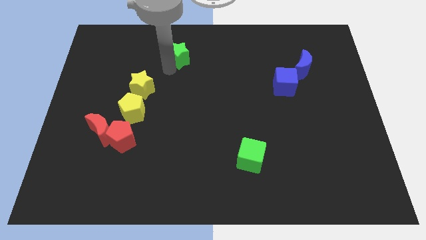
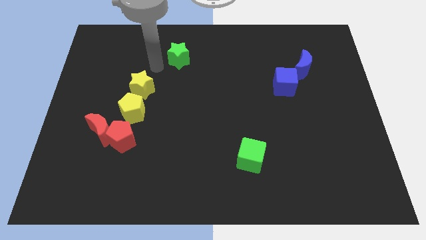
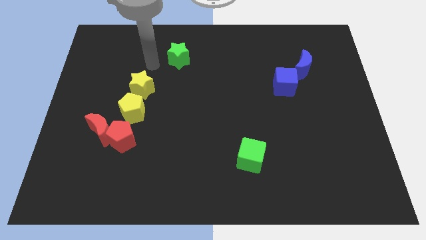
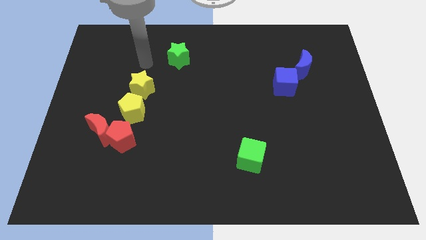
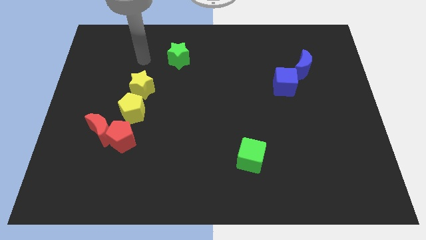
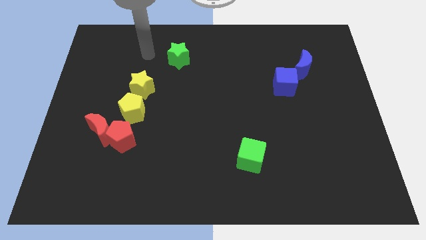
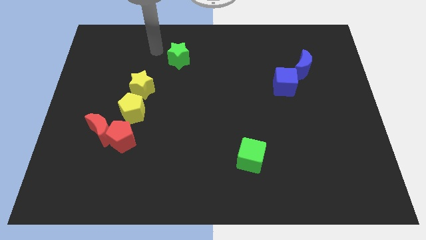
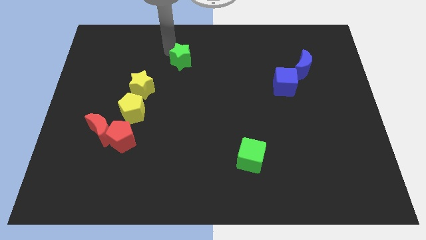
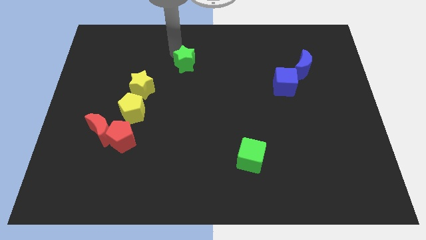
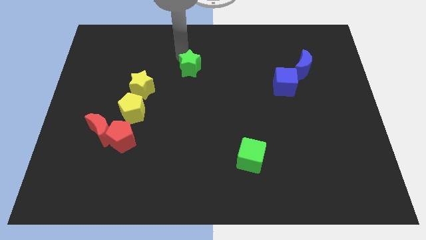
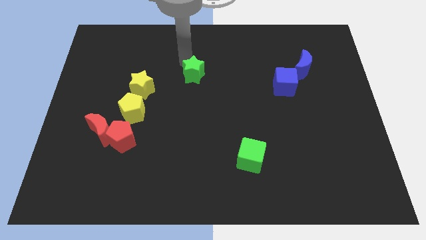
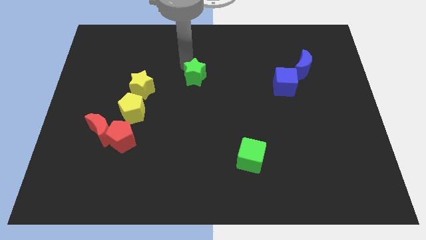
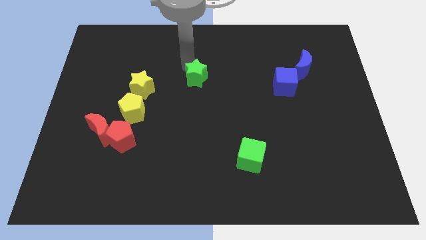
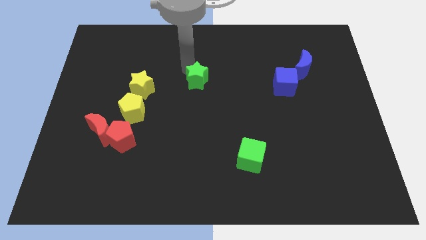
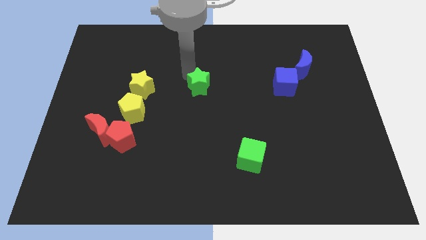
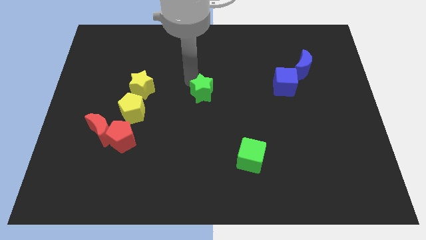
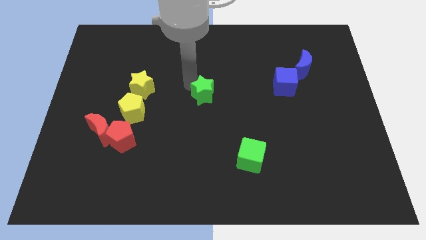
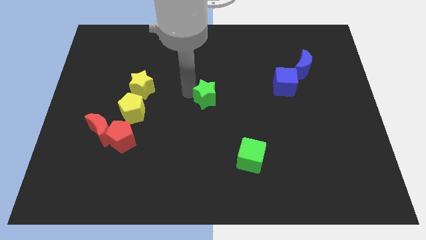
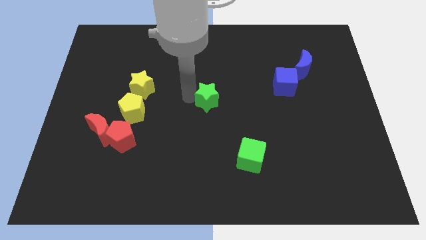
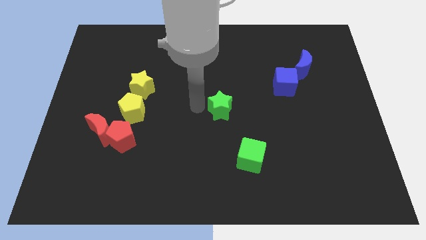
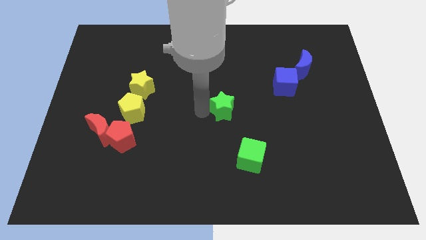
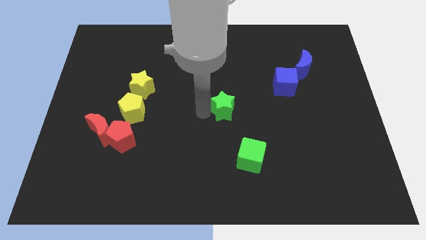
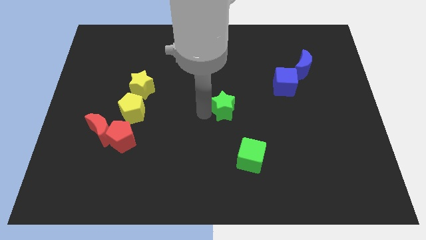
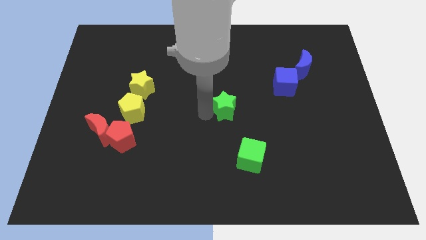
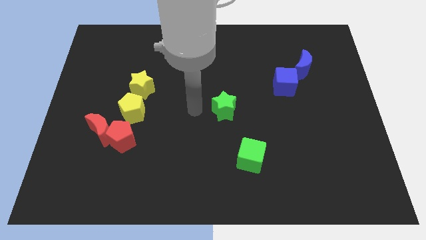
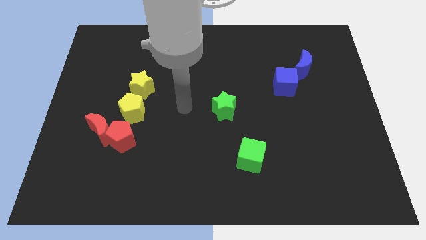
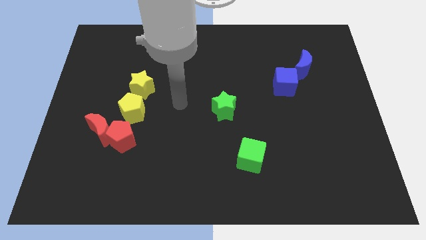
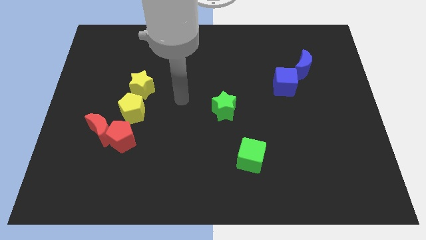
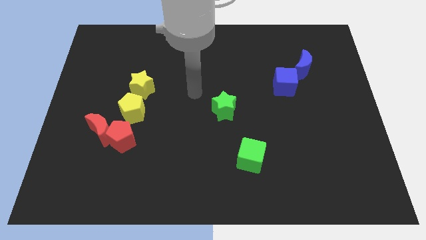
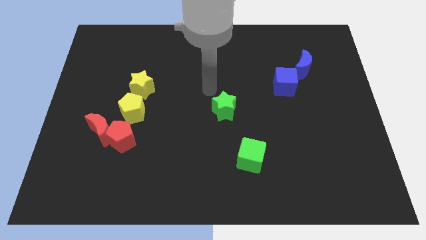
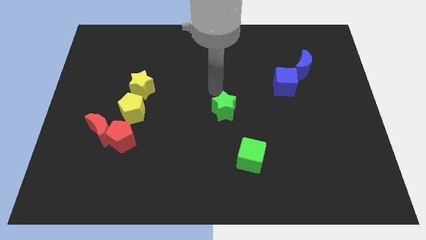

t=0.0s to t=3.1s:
place the green star to the right of the yellow pentagon

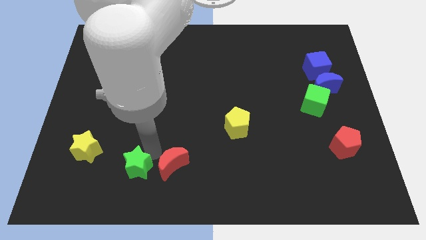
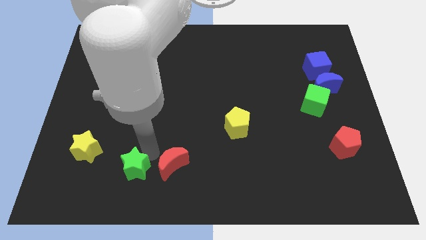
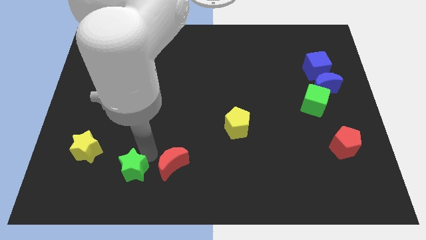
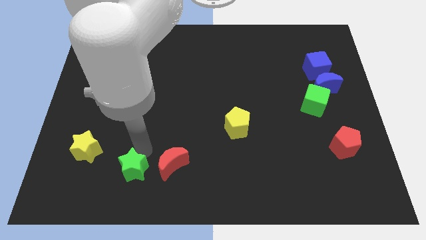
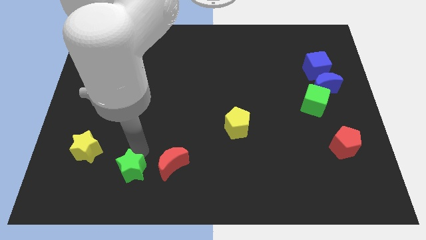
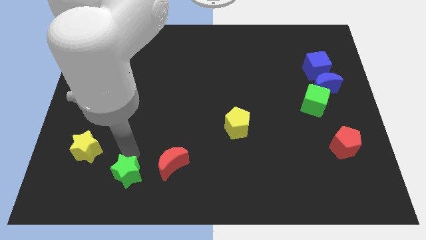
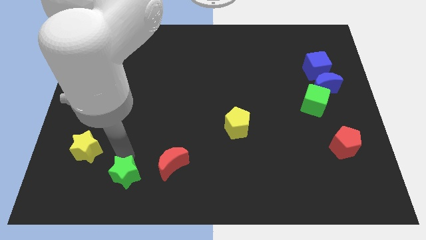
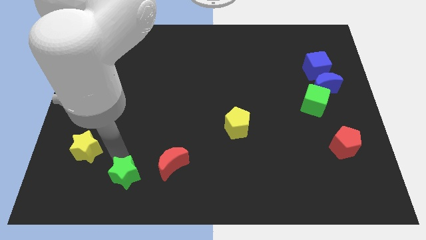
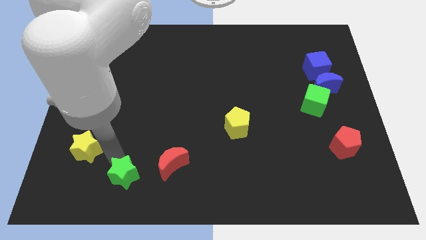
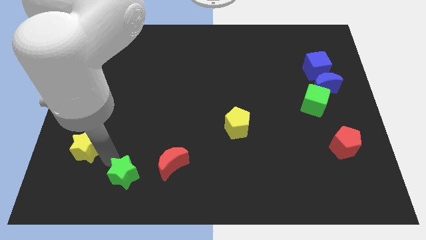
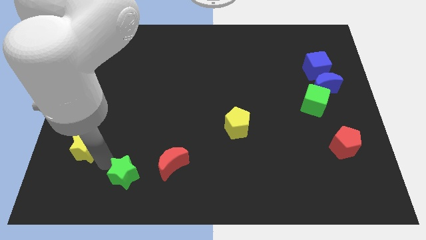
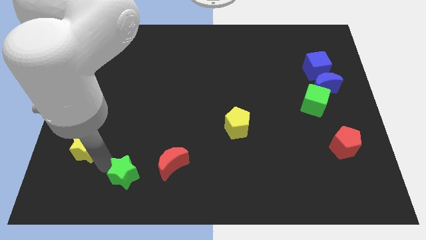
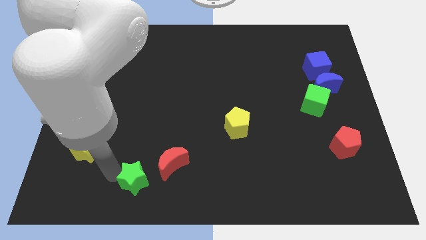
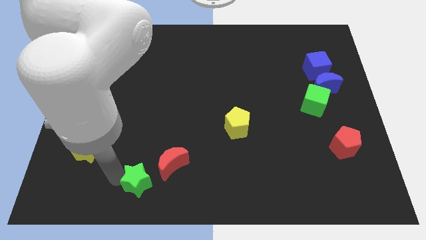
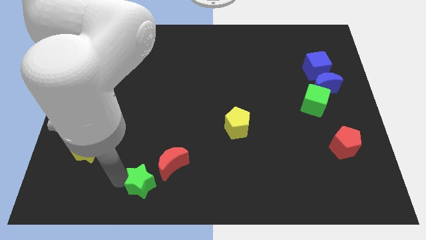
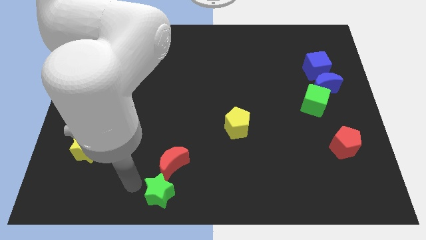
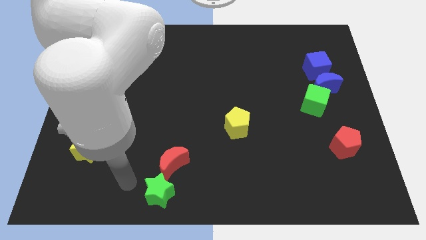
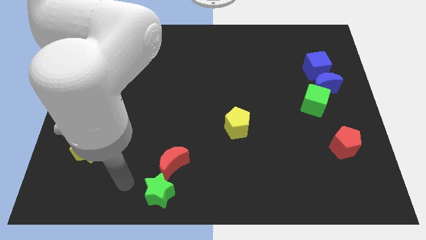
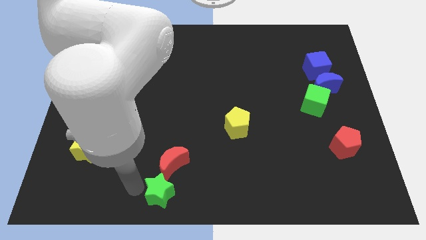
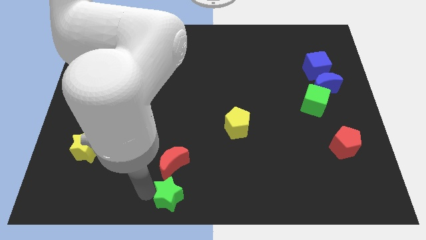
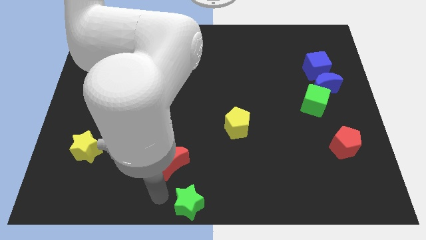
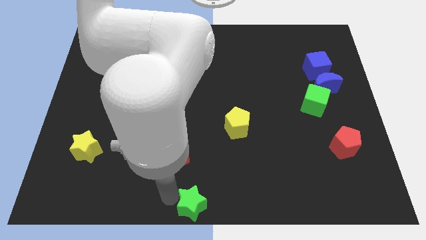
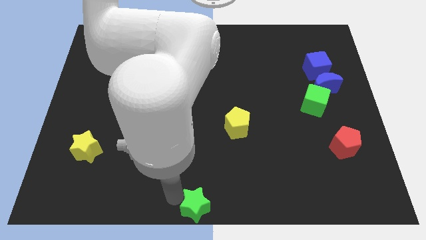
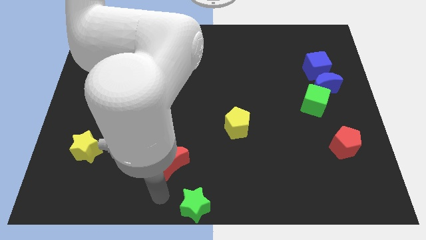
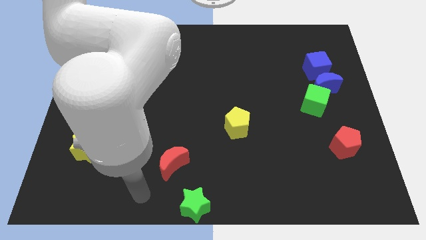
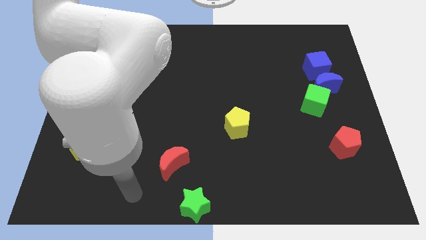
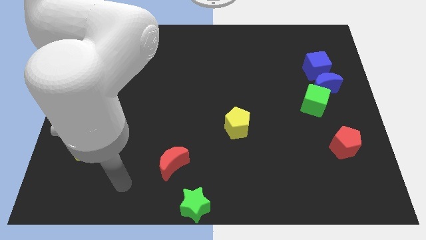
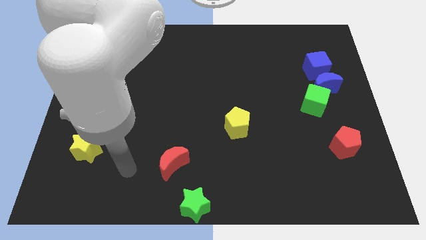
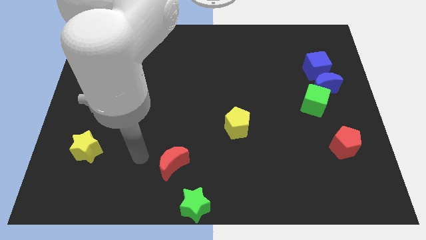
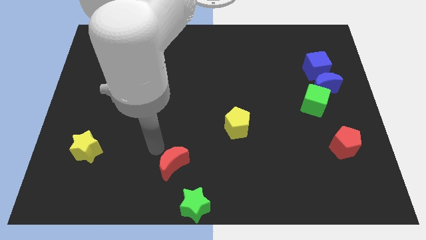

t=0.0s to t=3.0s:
place the green star below the red moon

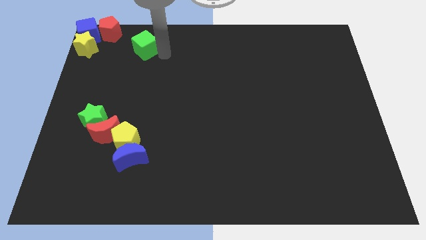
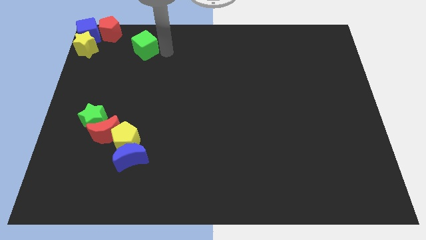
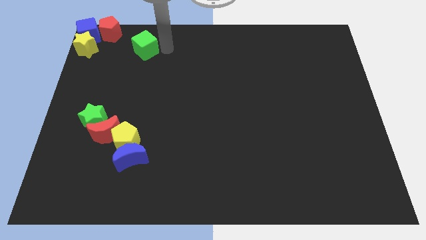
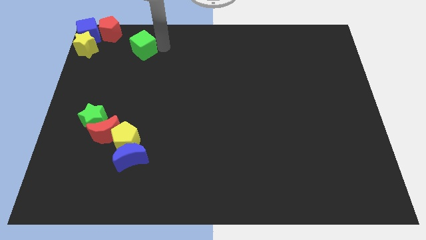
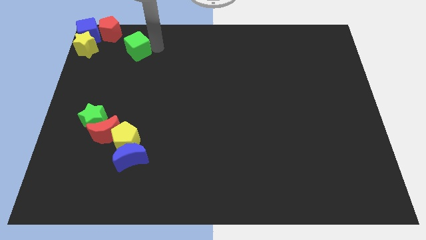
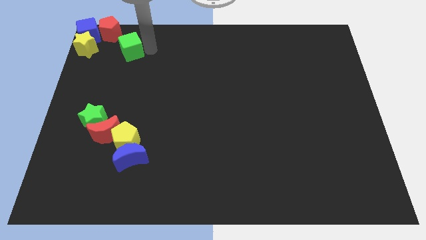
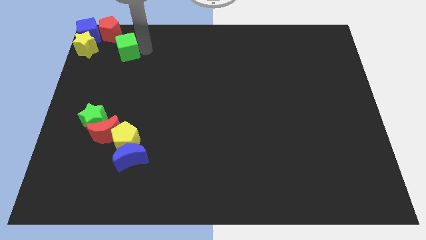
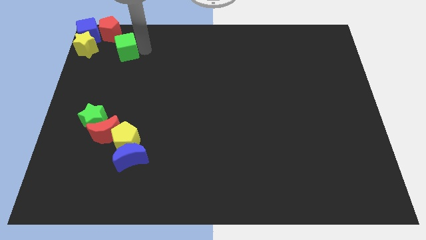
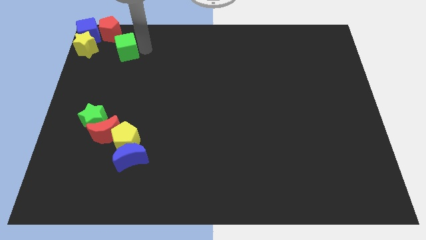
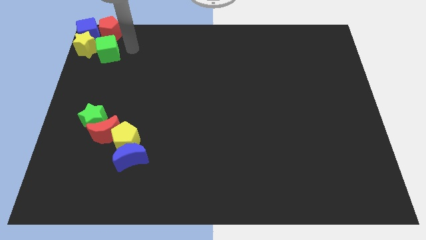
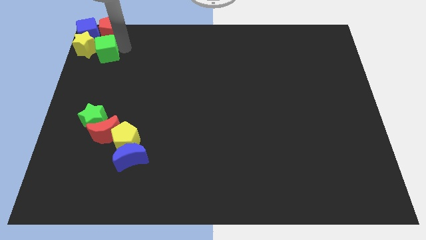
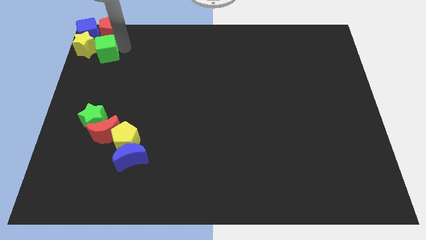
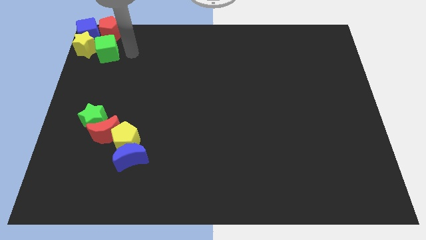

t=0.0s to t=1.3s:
place the green cube below the red pentagon

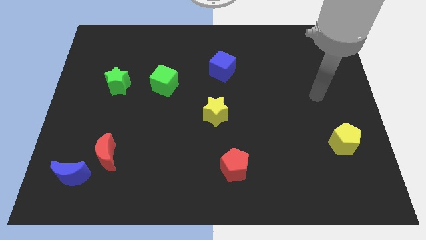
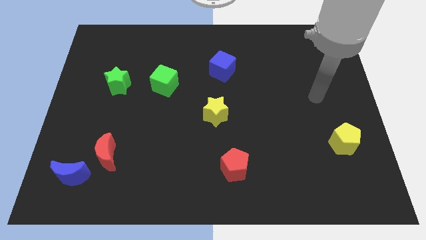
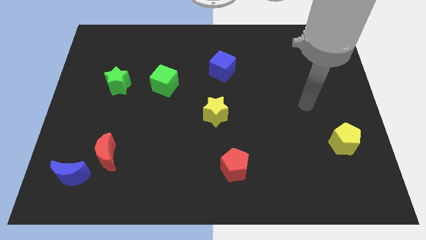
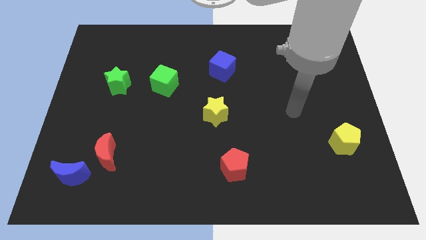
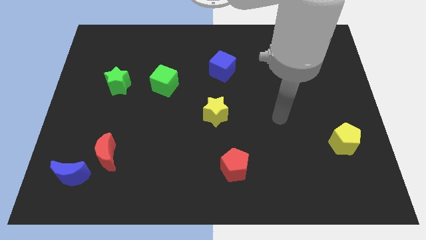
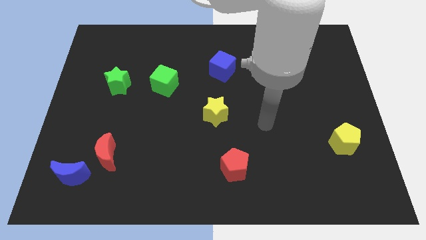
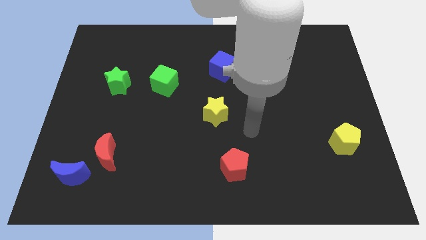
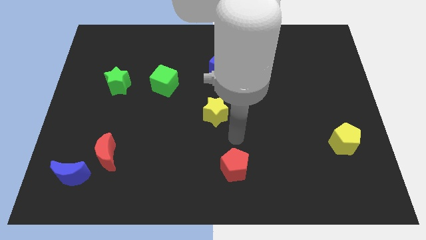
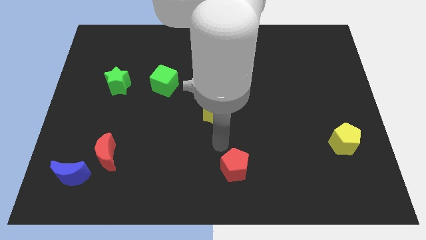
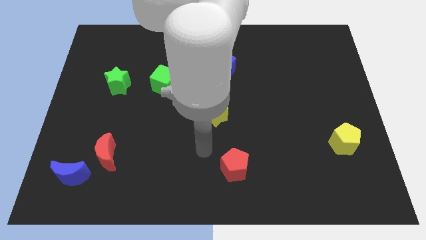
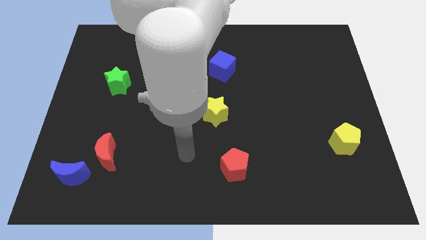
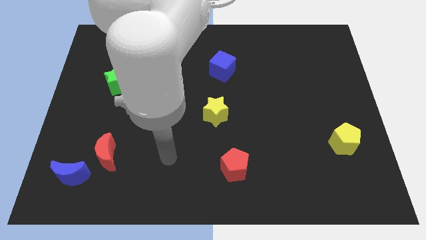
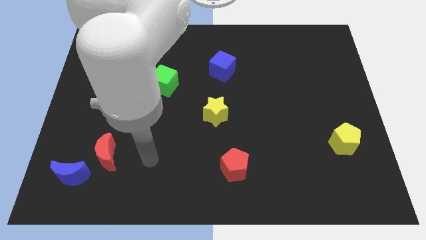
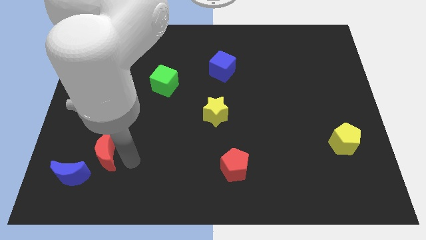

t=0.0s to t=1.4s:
move arm towards the right of red crescent

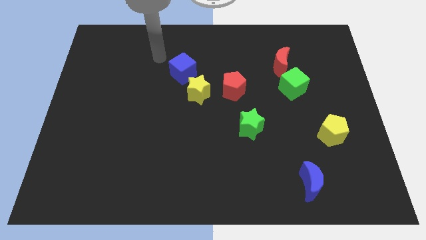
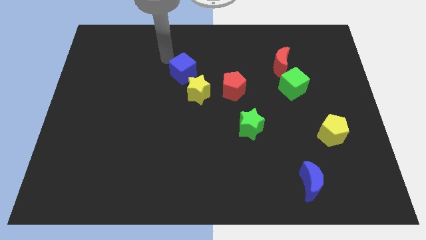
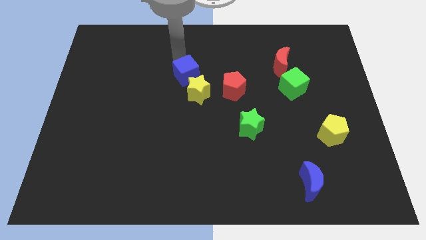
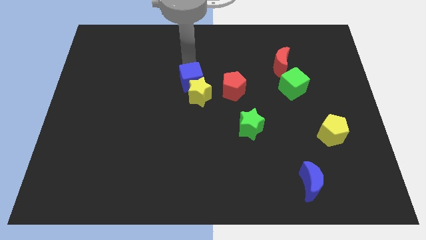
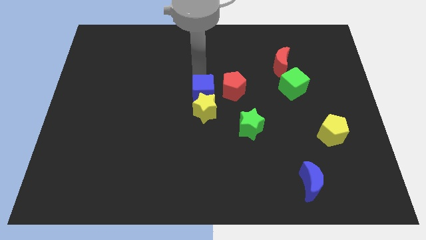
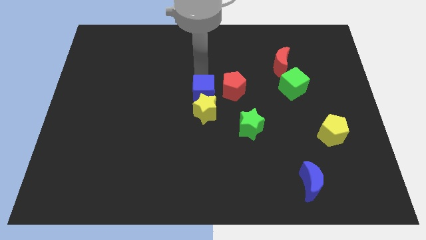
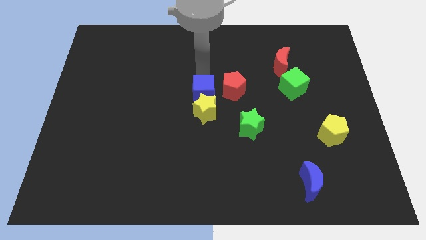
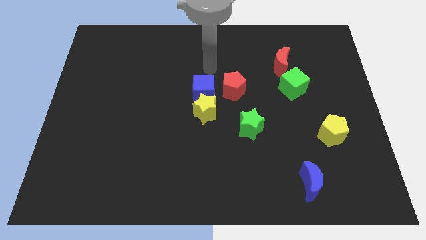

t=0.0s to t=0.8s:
push the blue cube along with the yellow star slightly to the bottom
